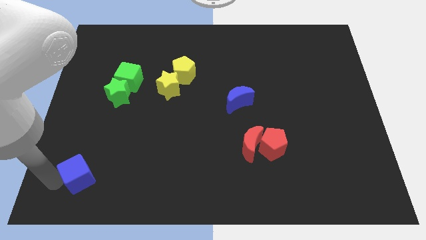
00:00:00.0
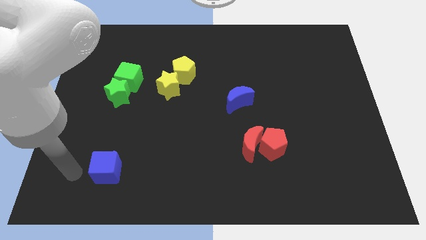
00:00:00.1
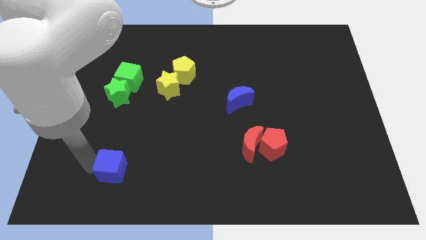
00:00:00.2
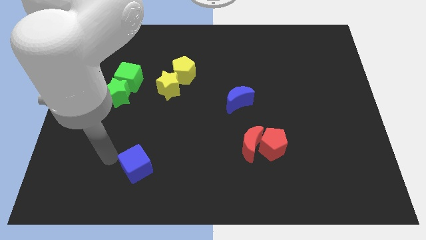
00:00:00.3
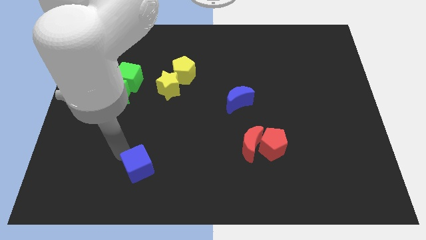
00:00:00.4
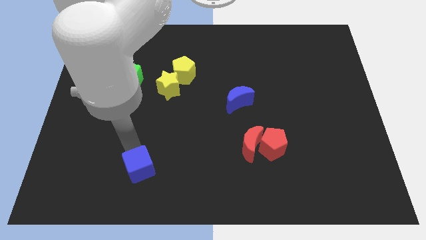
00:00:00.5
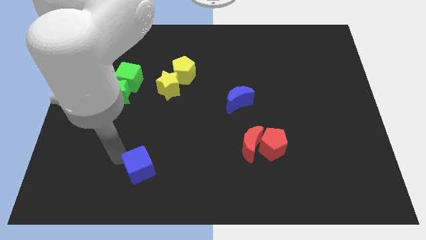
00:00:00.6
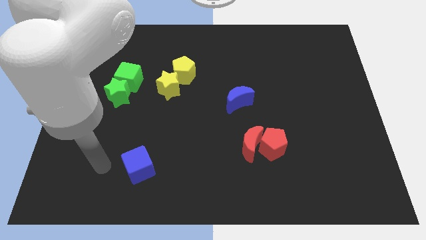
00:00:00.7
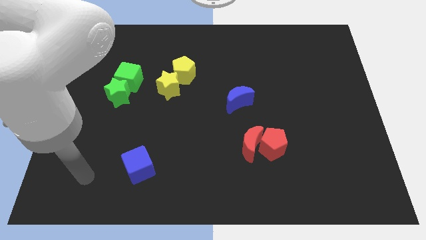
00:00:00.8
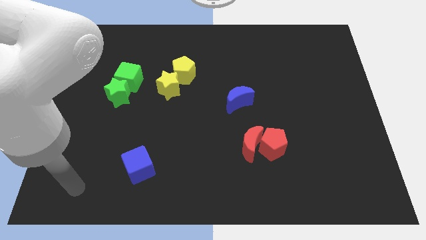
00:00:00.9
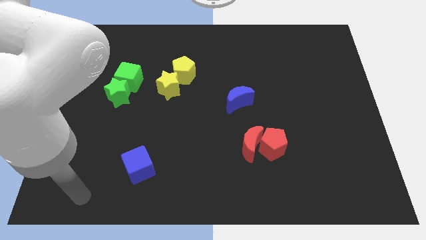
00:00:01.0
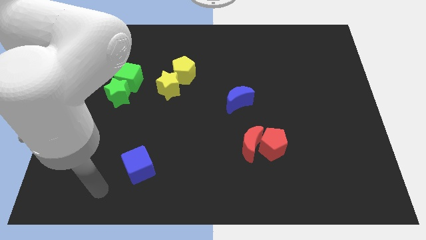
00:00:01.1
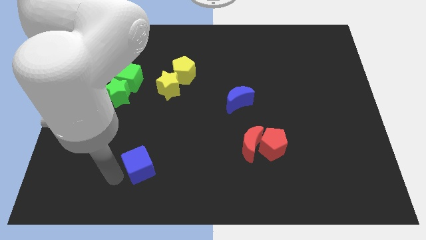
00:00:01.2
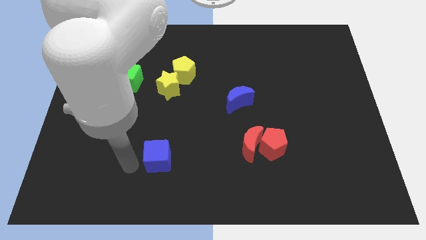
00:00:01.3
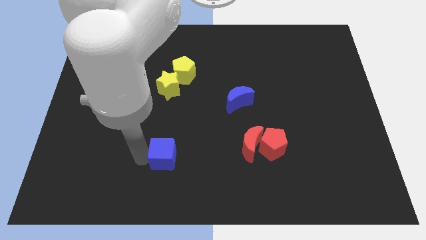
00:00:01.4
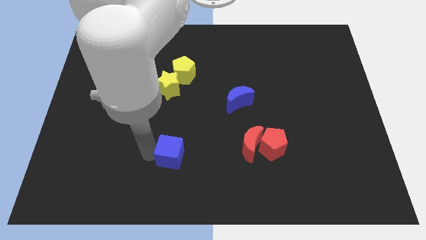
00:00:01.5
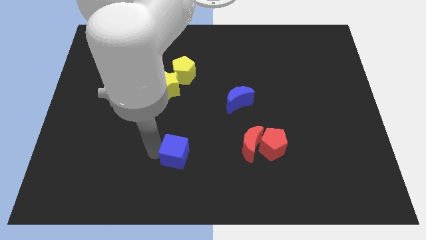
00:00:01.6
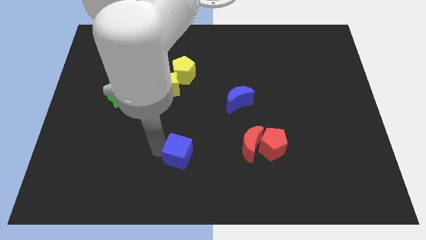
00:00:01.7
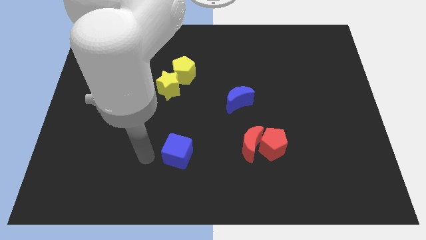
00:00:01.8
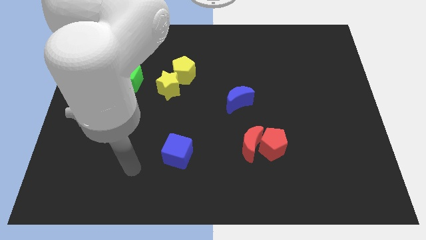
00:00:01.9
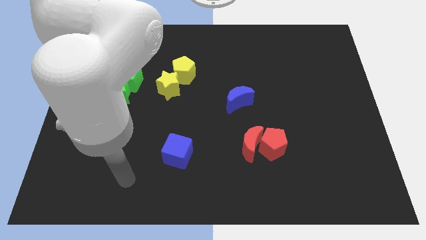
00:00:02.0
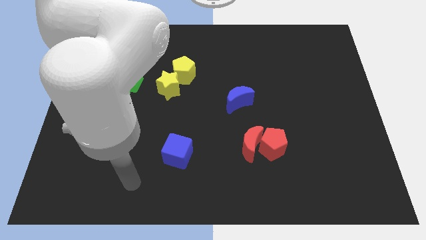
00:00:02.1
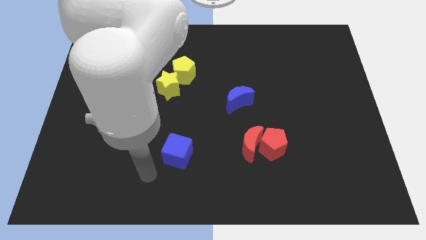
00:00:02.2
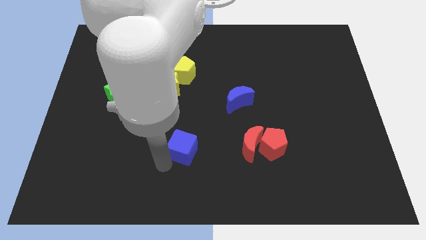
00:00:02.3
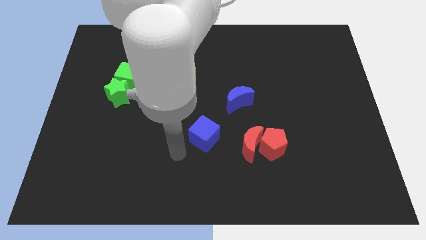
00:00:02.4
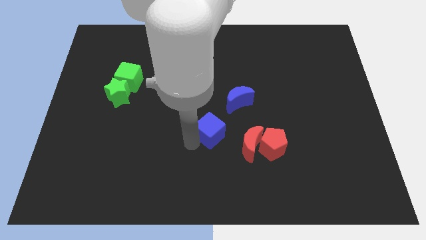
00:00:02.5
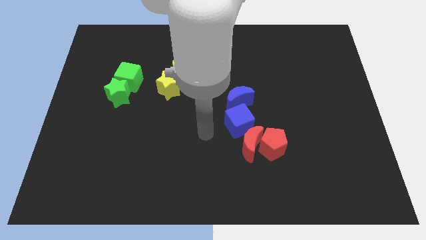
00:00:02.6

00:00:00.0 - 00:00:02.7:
move the blue cube to the center of the board

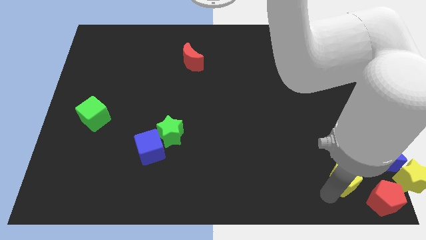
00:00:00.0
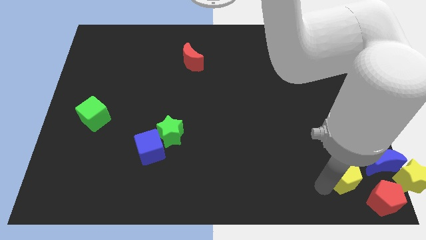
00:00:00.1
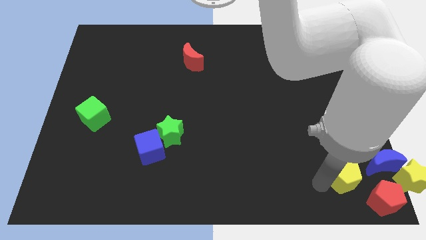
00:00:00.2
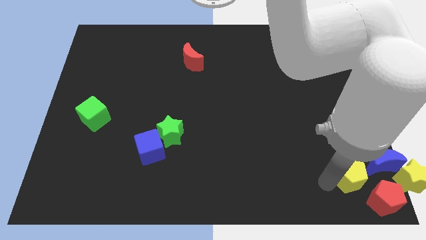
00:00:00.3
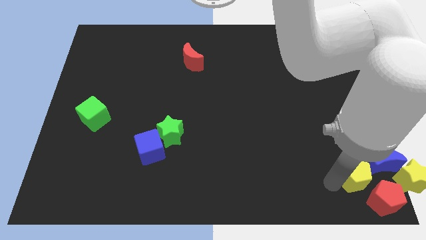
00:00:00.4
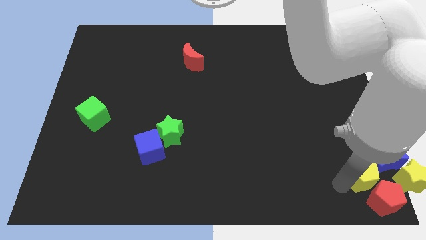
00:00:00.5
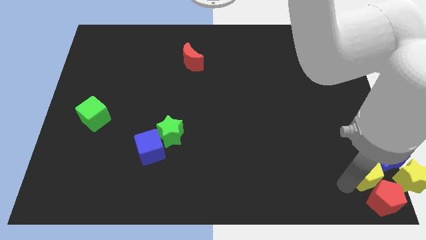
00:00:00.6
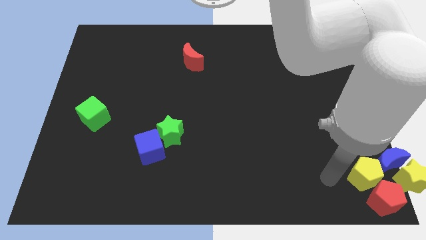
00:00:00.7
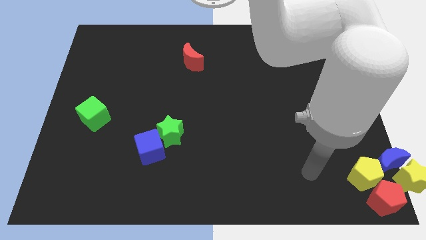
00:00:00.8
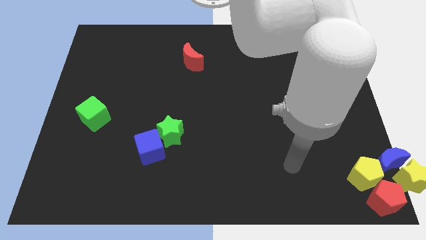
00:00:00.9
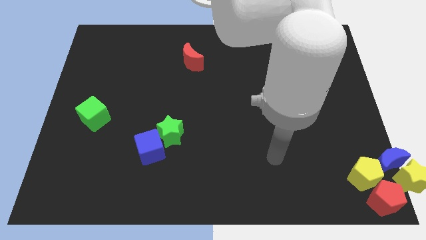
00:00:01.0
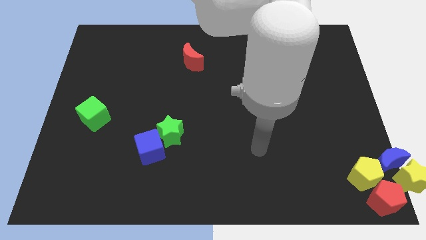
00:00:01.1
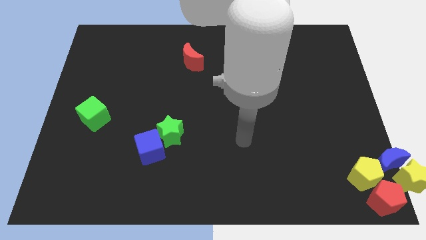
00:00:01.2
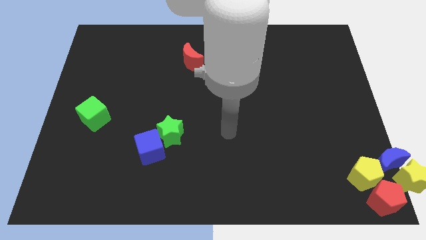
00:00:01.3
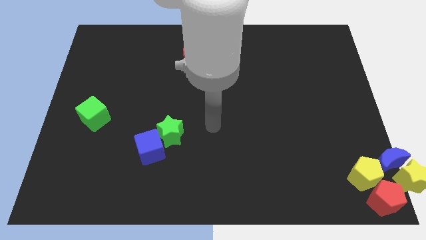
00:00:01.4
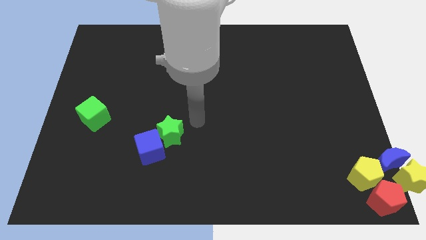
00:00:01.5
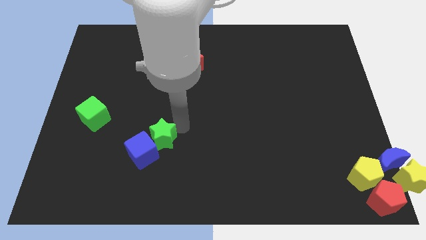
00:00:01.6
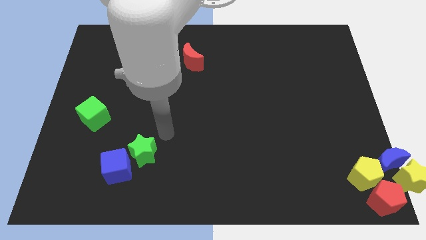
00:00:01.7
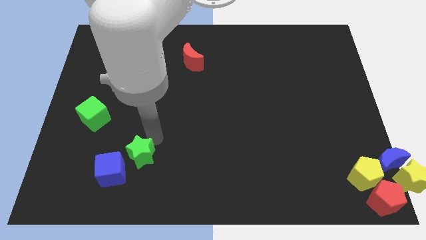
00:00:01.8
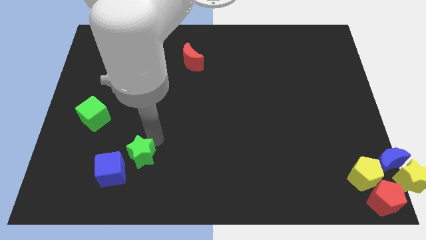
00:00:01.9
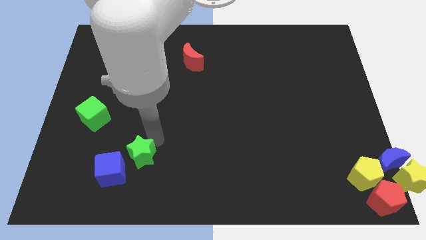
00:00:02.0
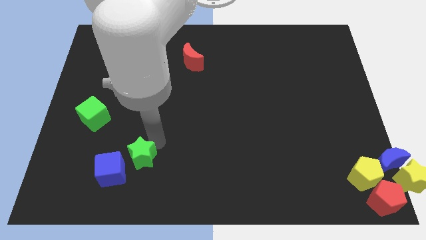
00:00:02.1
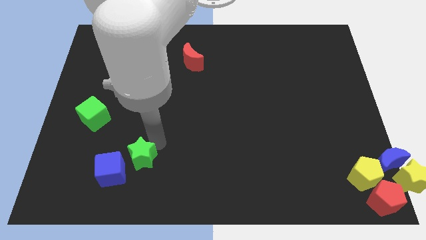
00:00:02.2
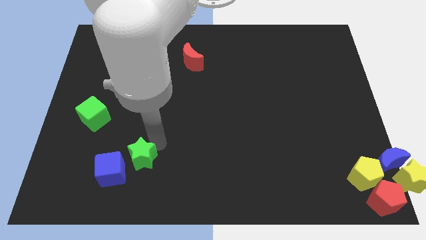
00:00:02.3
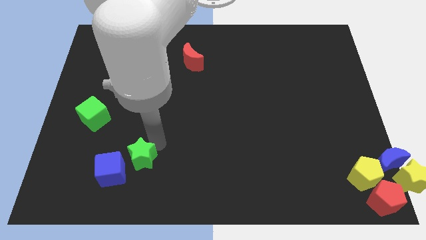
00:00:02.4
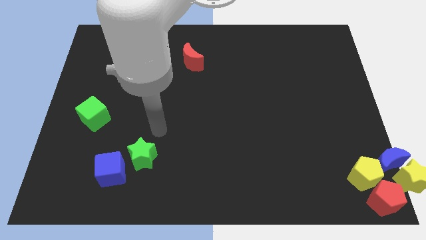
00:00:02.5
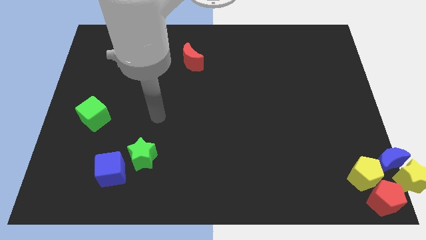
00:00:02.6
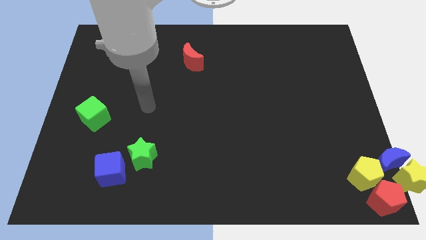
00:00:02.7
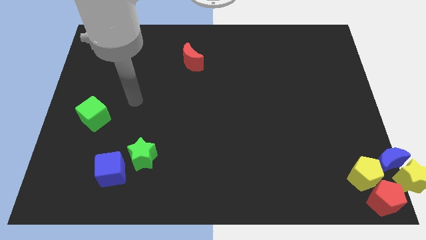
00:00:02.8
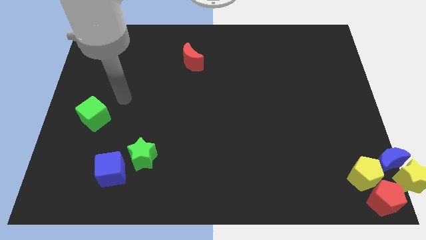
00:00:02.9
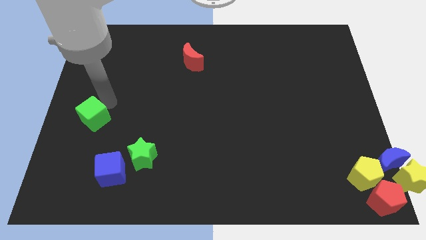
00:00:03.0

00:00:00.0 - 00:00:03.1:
separate green star and the blue cube

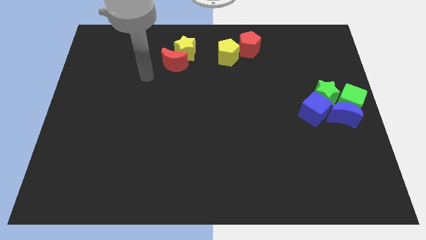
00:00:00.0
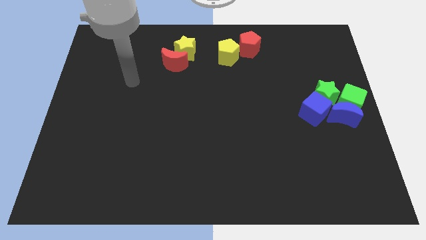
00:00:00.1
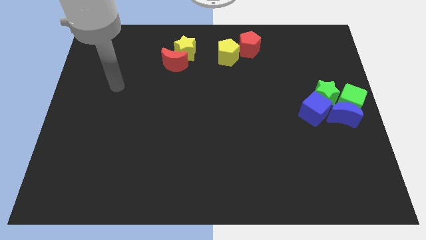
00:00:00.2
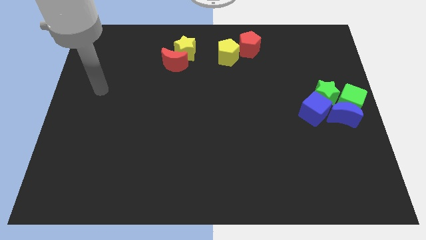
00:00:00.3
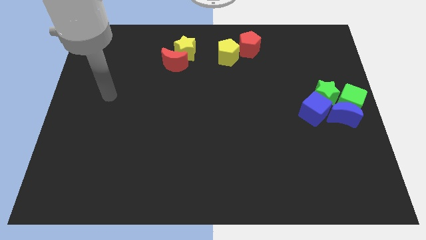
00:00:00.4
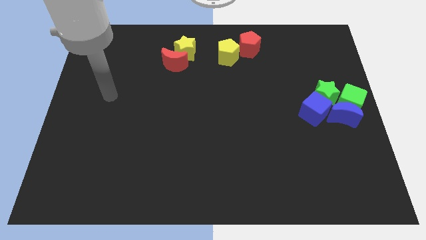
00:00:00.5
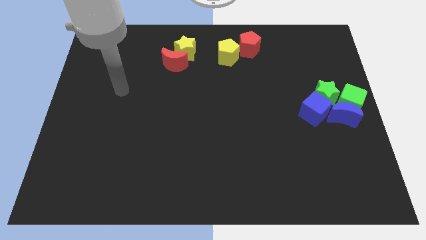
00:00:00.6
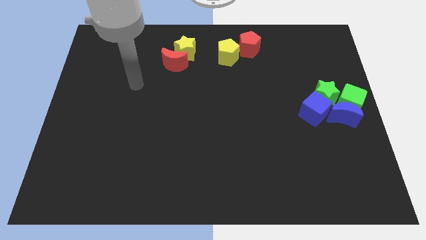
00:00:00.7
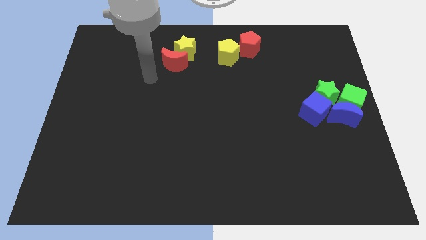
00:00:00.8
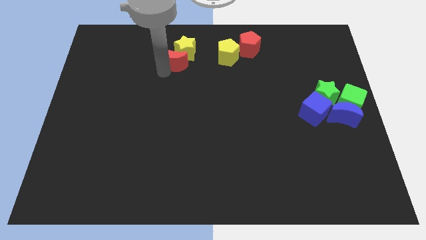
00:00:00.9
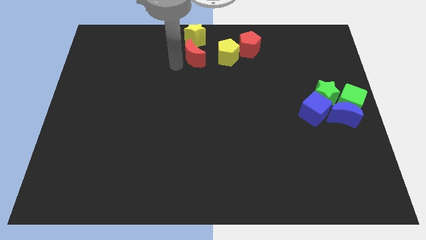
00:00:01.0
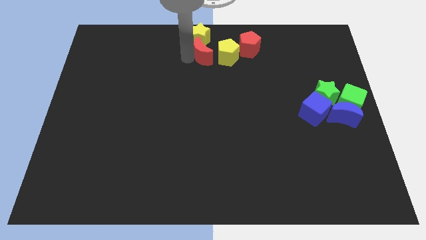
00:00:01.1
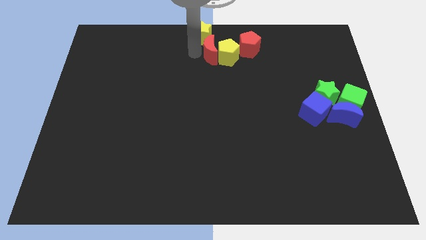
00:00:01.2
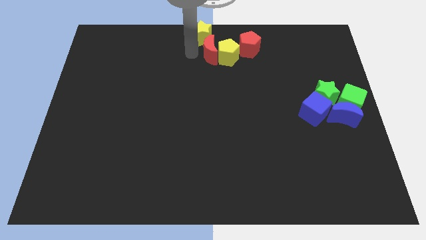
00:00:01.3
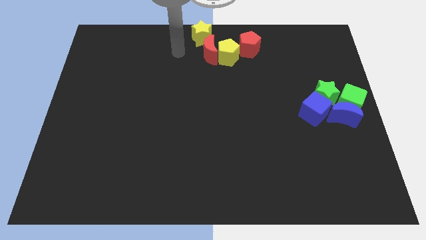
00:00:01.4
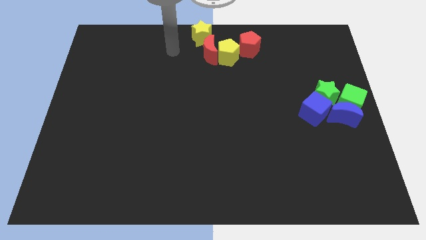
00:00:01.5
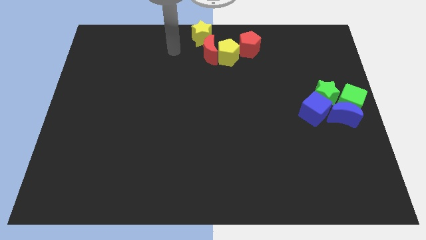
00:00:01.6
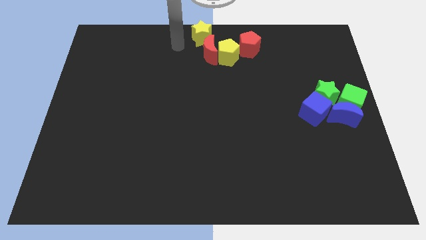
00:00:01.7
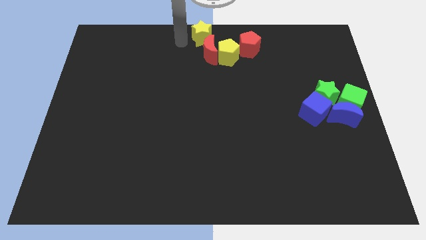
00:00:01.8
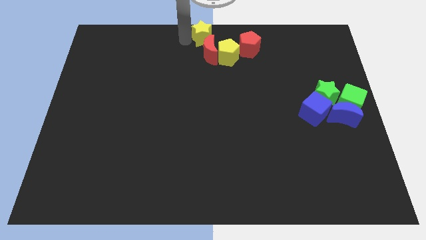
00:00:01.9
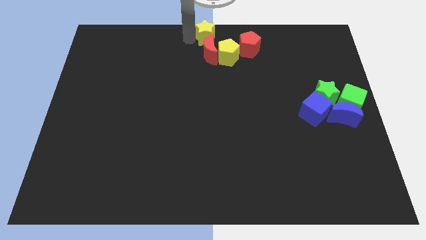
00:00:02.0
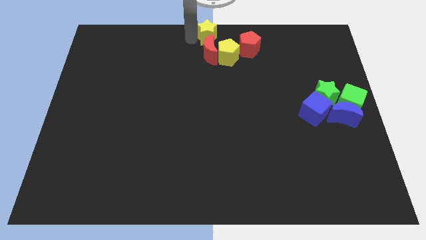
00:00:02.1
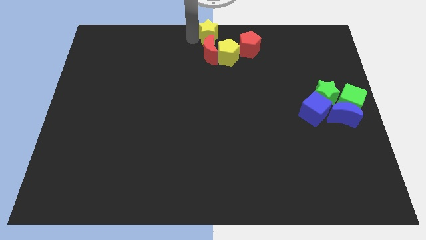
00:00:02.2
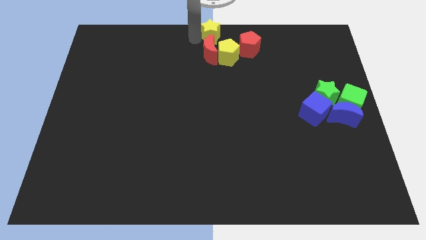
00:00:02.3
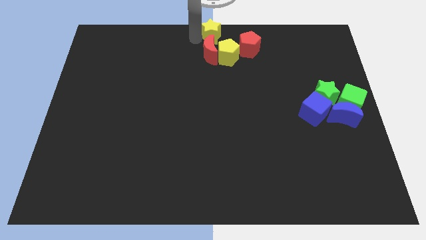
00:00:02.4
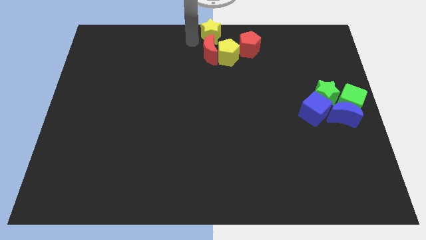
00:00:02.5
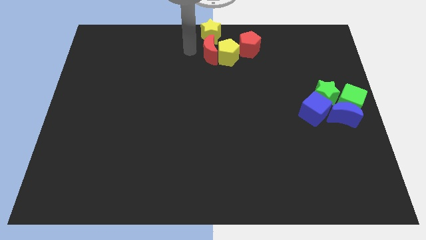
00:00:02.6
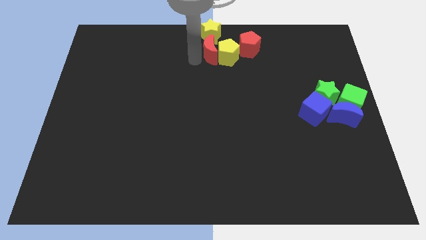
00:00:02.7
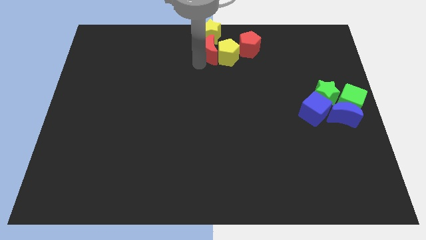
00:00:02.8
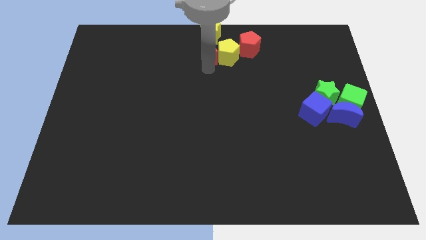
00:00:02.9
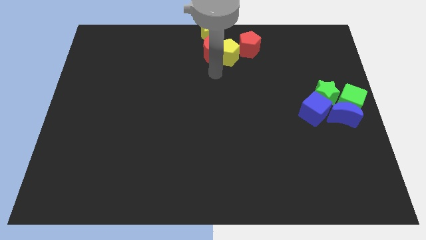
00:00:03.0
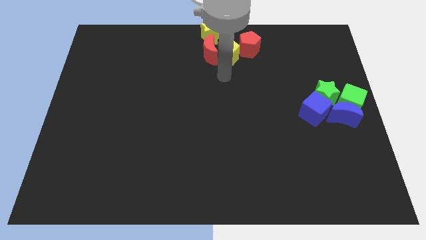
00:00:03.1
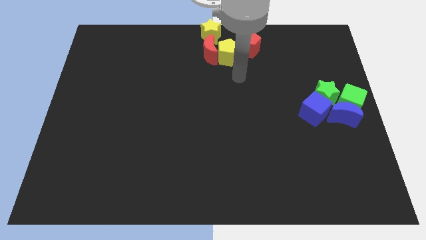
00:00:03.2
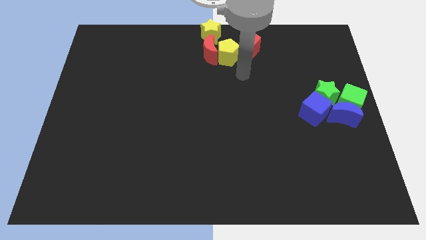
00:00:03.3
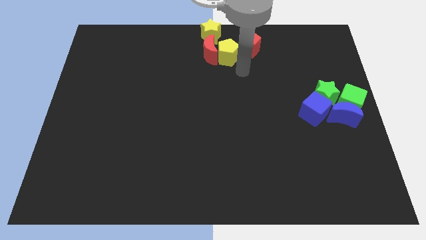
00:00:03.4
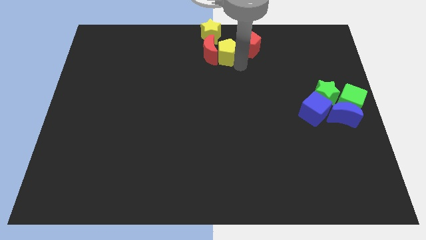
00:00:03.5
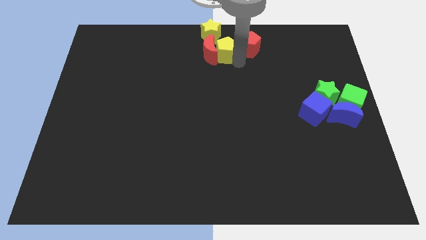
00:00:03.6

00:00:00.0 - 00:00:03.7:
move the red moon and the yellow star towards the top centre of the board
